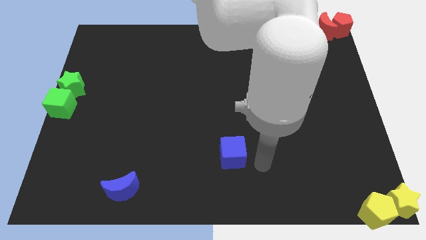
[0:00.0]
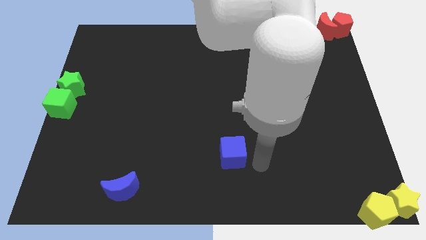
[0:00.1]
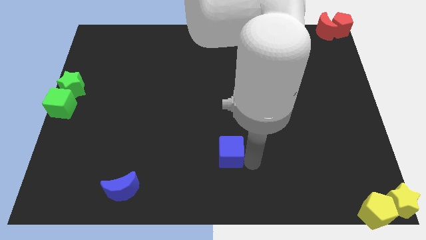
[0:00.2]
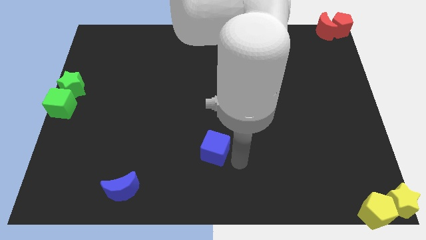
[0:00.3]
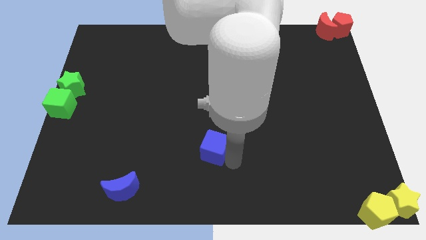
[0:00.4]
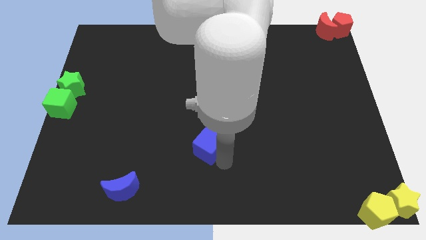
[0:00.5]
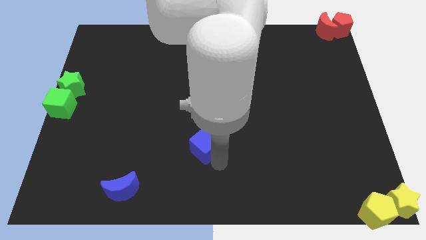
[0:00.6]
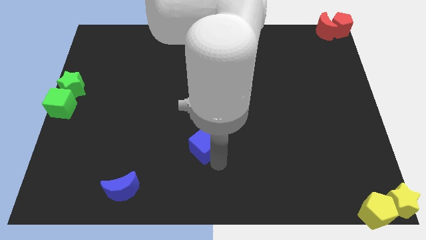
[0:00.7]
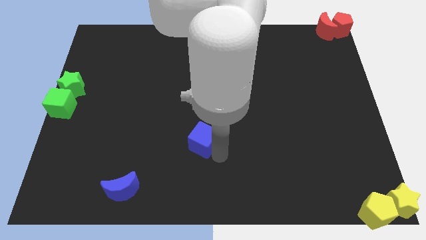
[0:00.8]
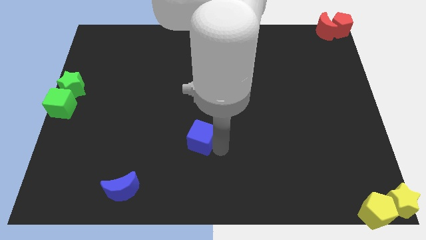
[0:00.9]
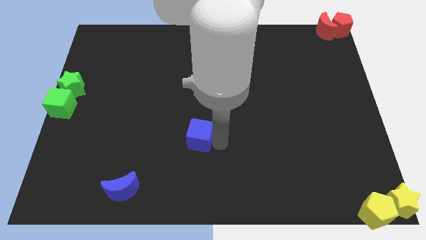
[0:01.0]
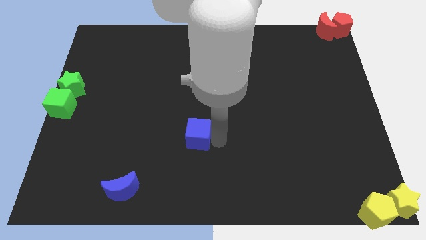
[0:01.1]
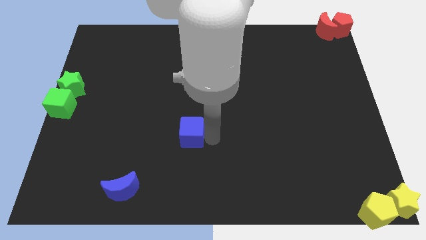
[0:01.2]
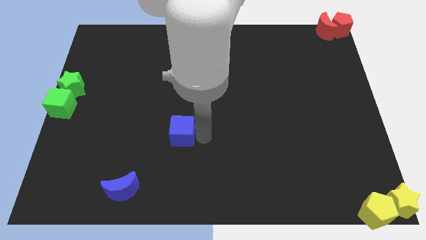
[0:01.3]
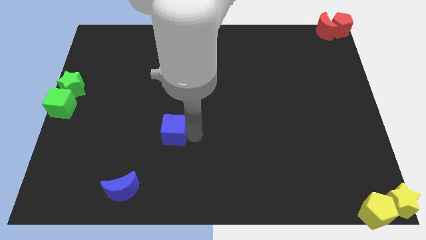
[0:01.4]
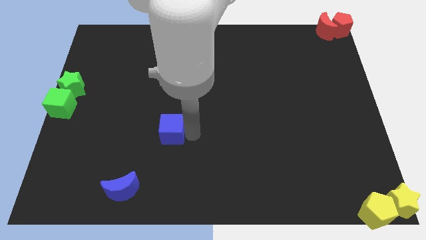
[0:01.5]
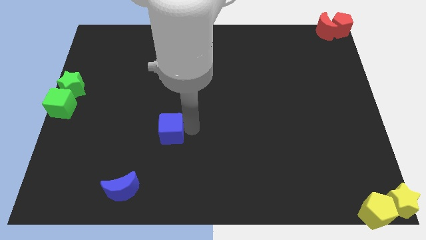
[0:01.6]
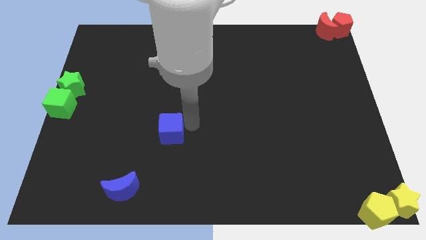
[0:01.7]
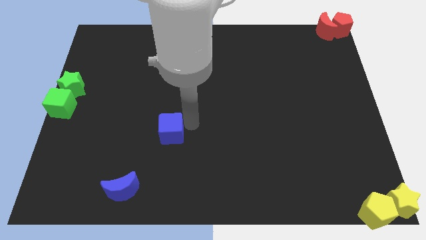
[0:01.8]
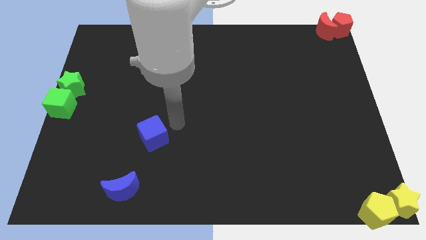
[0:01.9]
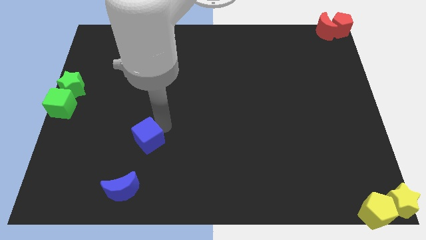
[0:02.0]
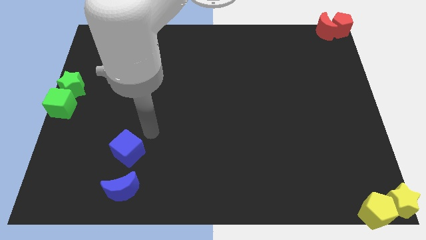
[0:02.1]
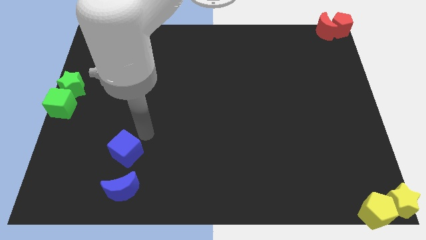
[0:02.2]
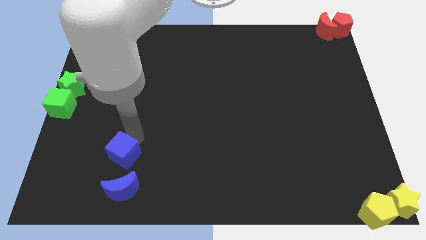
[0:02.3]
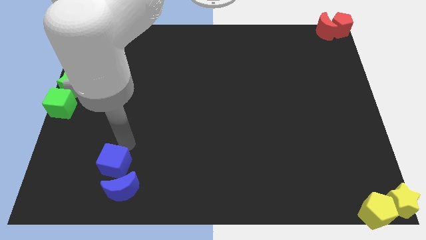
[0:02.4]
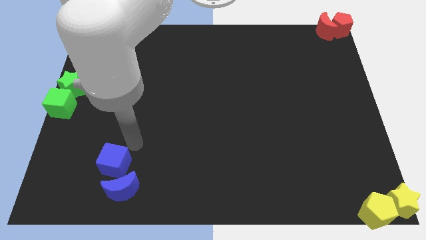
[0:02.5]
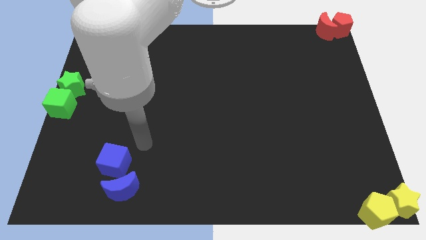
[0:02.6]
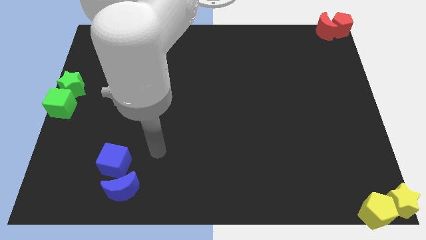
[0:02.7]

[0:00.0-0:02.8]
move blue cube into blue crescent

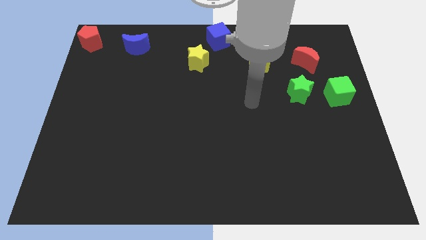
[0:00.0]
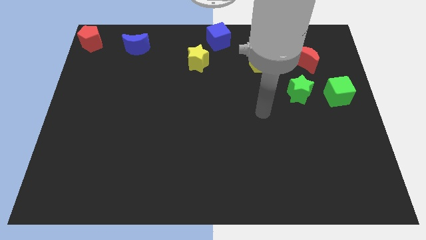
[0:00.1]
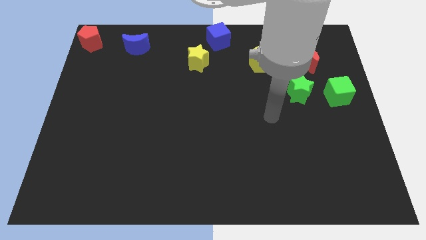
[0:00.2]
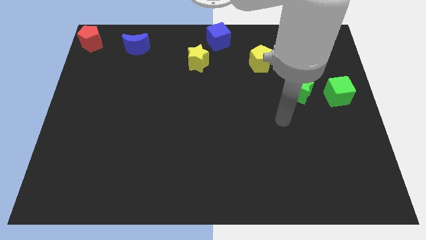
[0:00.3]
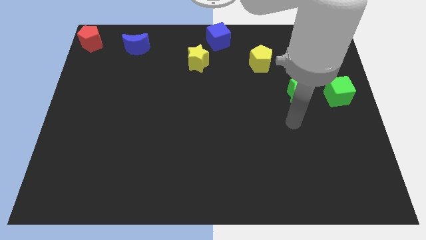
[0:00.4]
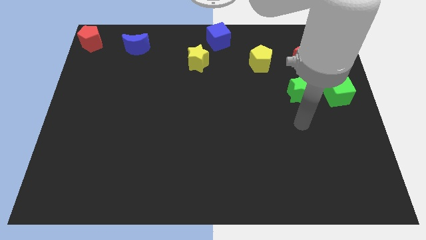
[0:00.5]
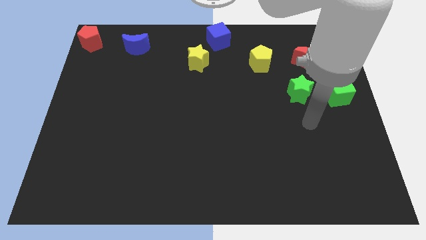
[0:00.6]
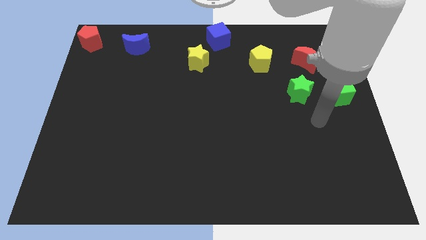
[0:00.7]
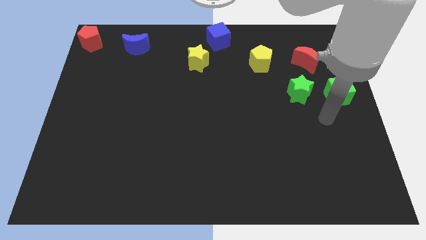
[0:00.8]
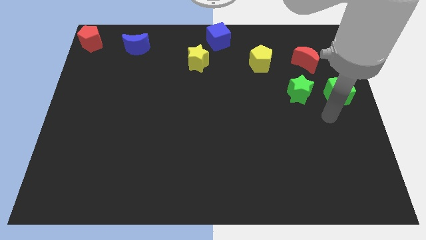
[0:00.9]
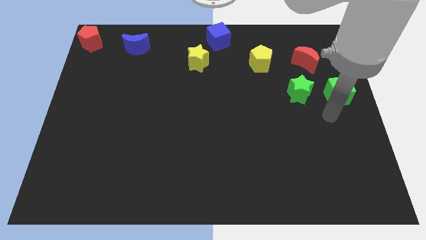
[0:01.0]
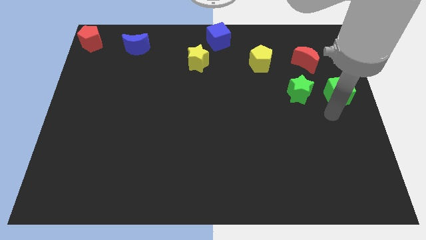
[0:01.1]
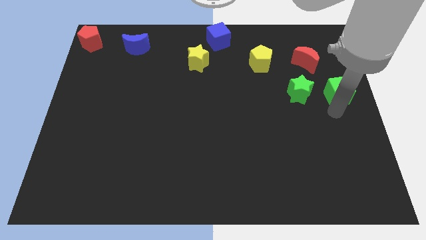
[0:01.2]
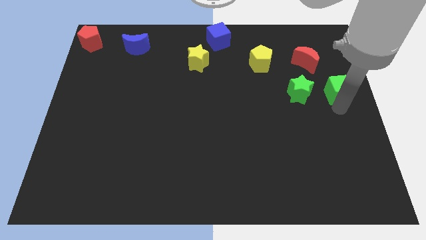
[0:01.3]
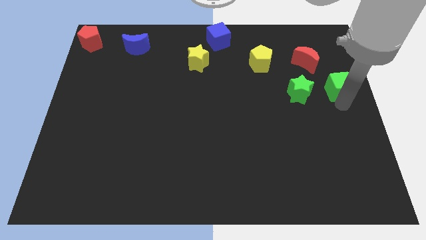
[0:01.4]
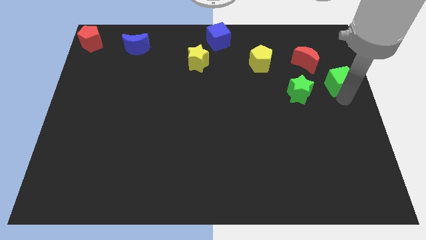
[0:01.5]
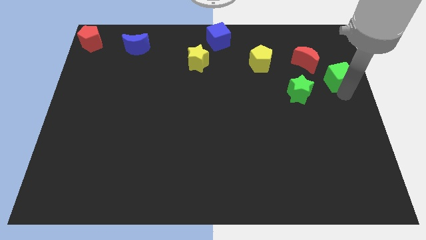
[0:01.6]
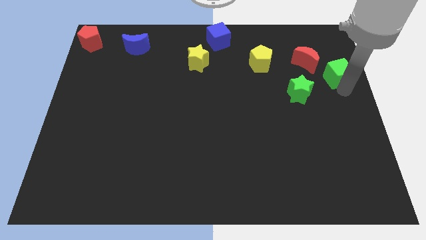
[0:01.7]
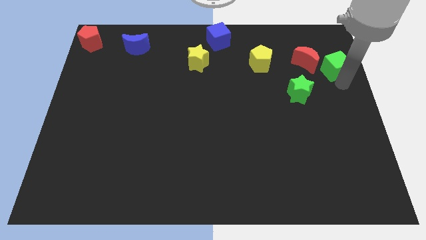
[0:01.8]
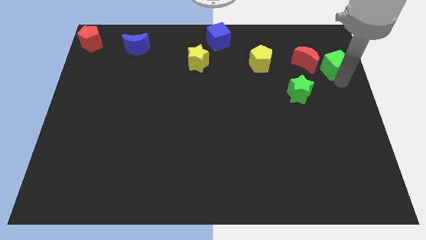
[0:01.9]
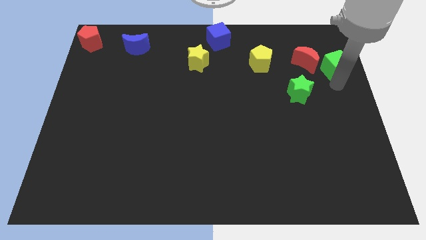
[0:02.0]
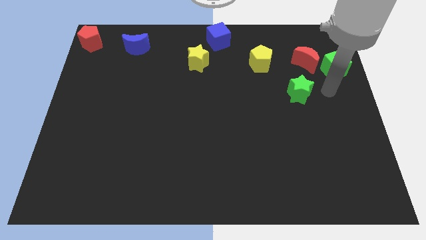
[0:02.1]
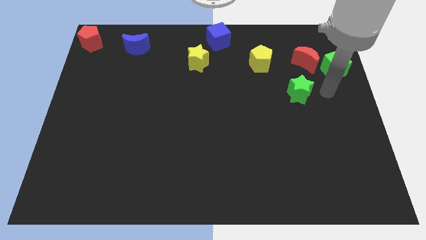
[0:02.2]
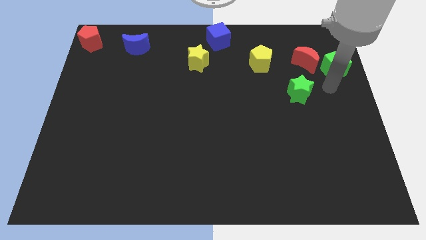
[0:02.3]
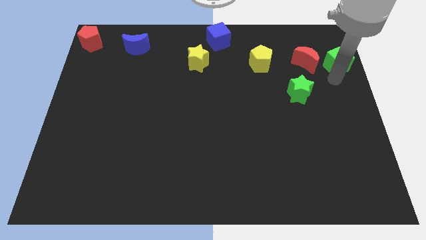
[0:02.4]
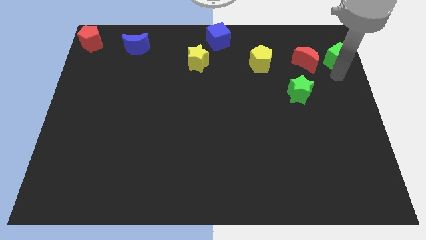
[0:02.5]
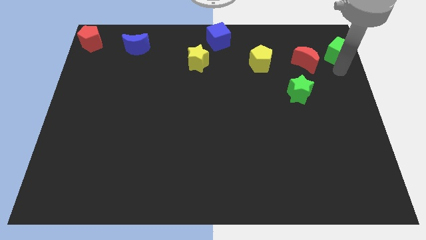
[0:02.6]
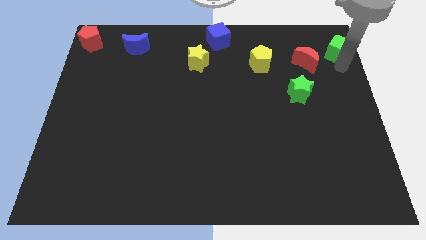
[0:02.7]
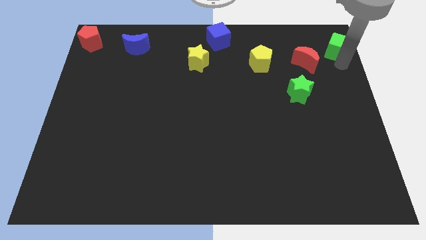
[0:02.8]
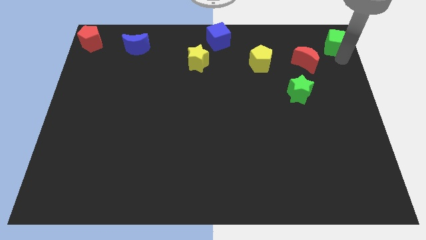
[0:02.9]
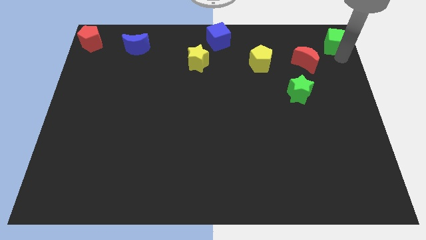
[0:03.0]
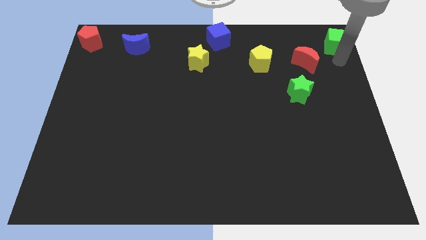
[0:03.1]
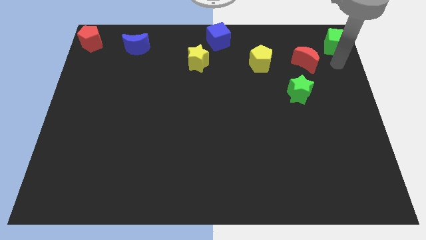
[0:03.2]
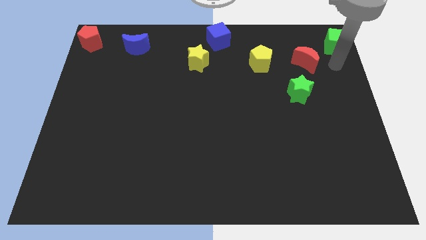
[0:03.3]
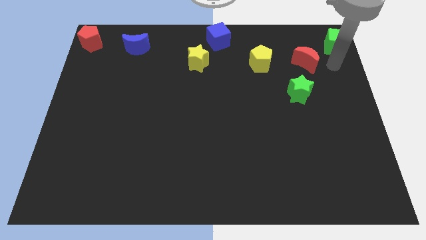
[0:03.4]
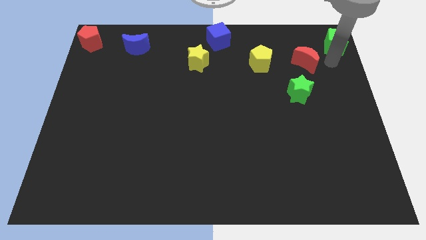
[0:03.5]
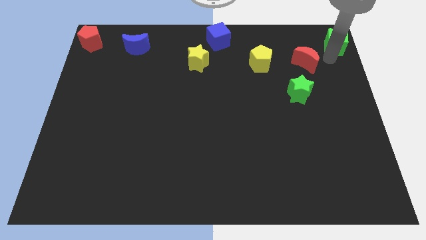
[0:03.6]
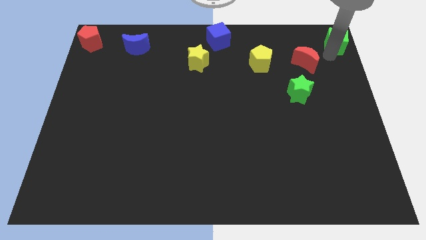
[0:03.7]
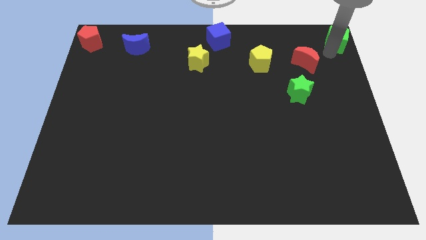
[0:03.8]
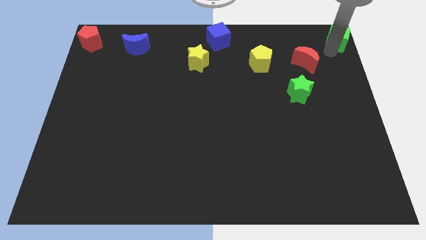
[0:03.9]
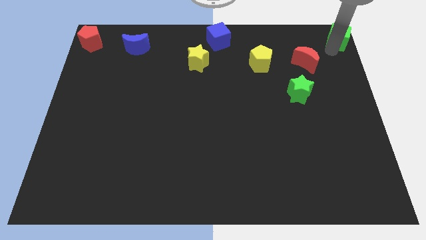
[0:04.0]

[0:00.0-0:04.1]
move the green cube to the top right corner

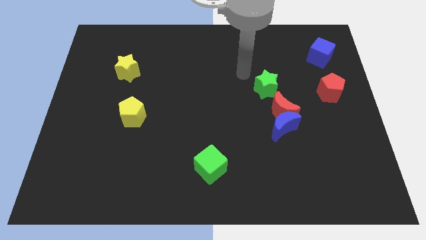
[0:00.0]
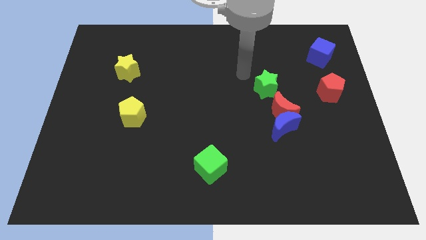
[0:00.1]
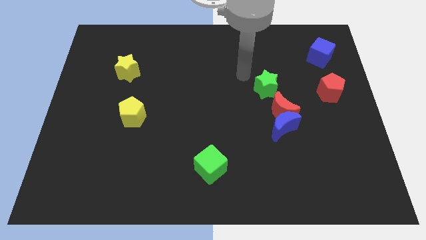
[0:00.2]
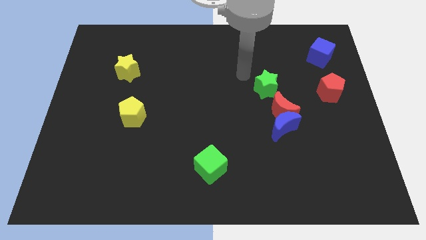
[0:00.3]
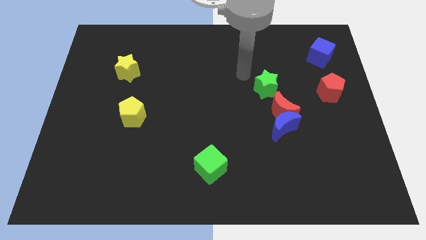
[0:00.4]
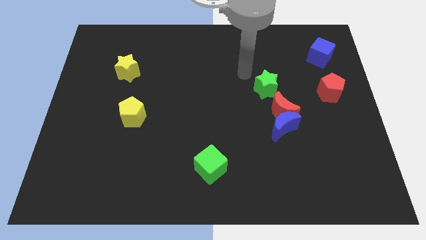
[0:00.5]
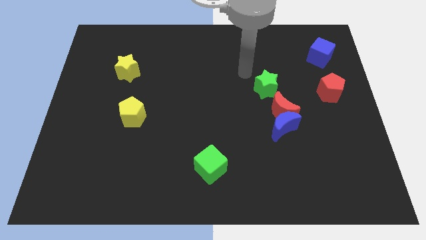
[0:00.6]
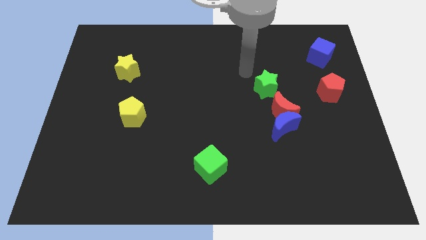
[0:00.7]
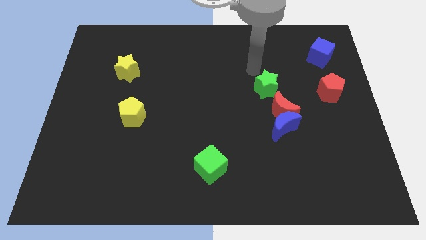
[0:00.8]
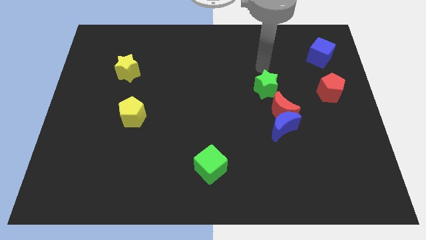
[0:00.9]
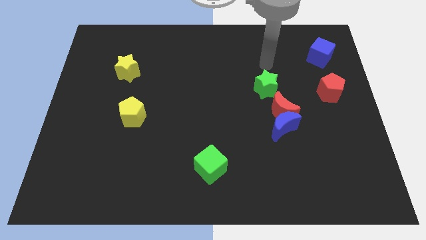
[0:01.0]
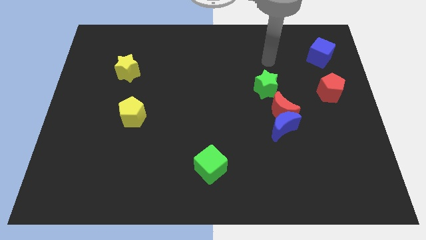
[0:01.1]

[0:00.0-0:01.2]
point your hand at the top side of the green star

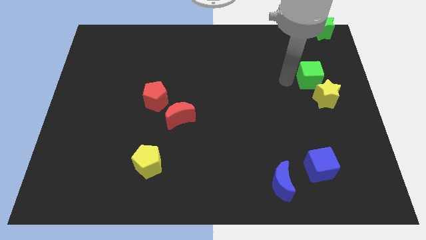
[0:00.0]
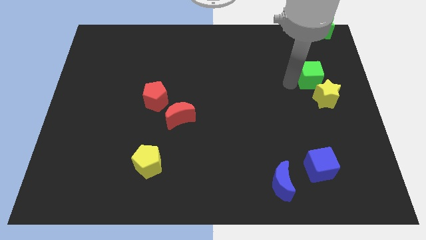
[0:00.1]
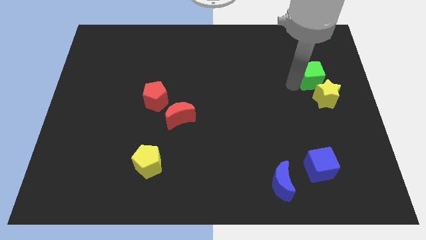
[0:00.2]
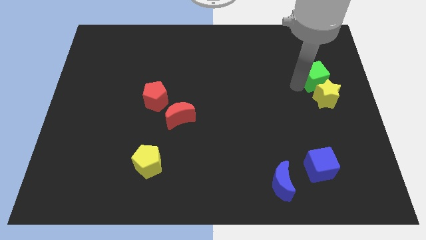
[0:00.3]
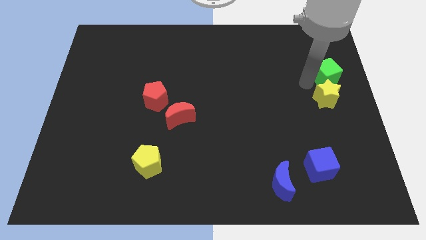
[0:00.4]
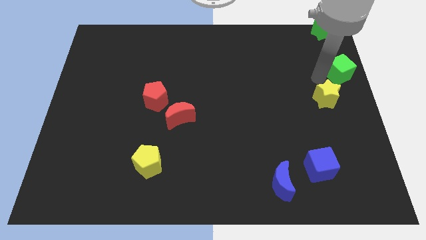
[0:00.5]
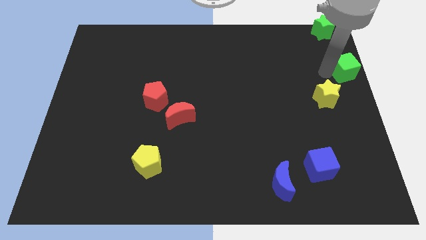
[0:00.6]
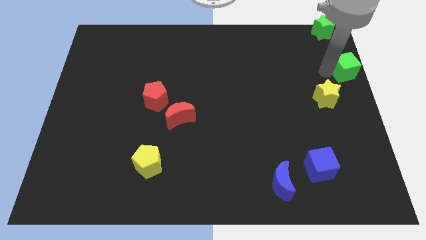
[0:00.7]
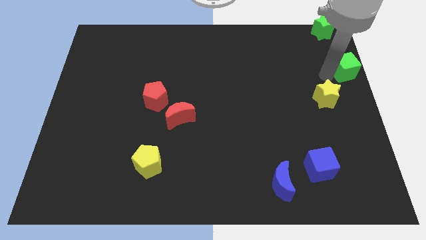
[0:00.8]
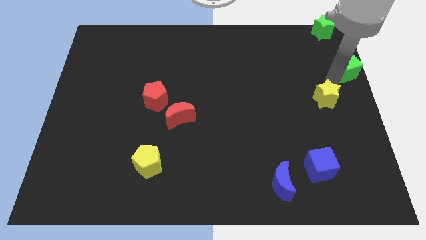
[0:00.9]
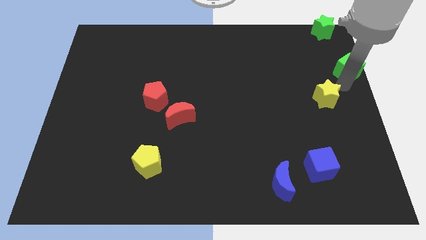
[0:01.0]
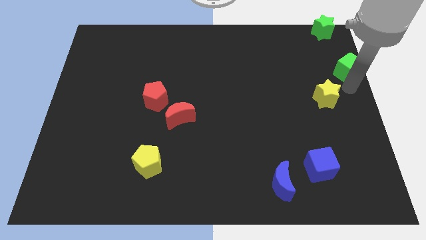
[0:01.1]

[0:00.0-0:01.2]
move the green cube to the right of the board
